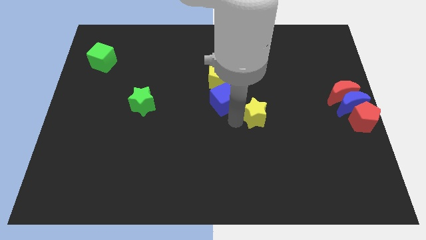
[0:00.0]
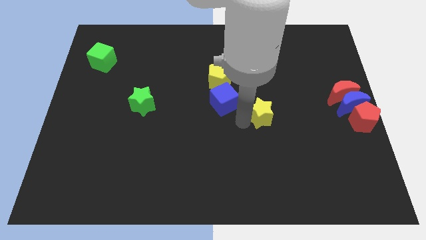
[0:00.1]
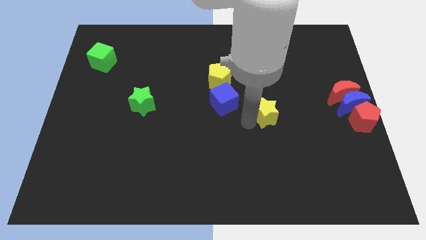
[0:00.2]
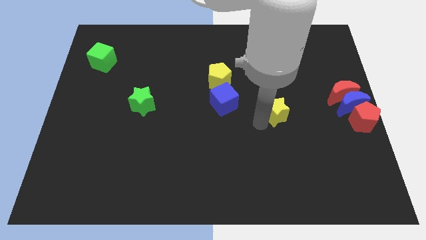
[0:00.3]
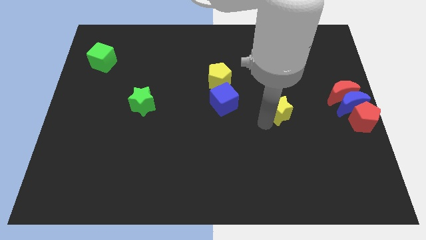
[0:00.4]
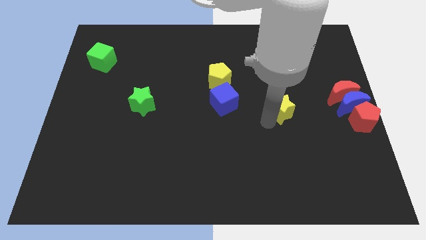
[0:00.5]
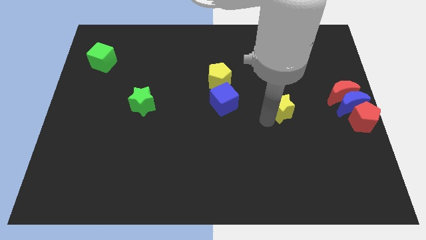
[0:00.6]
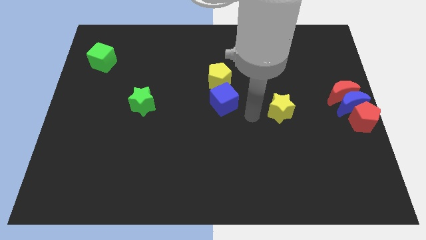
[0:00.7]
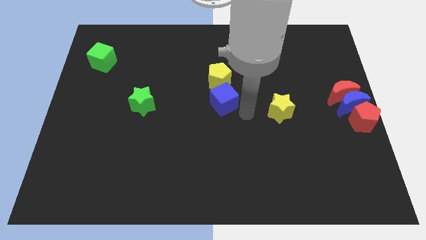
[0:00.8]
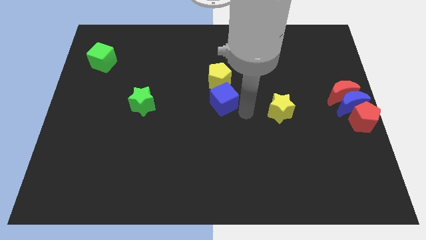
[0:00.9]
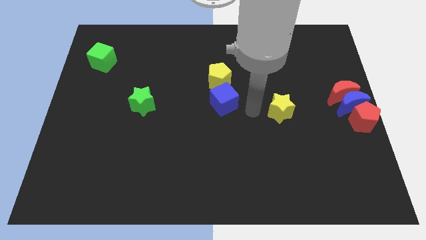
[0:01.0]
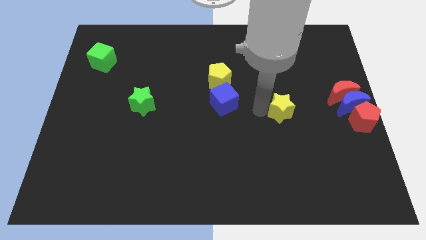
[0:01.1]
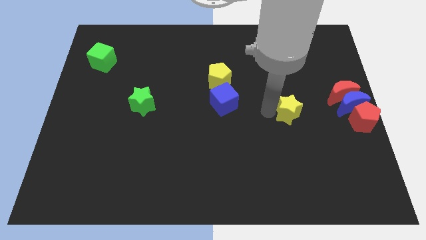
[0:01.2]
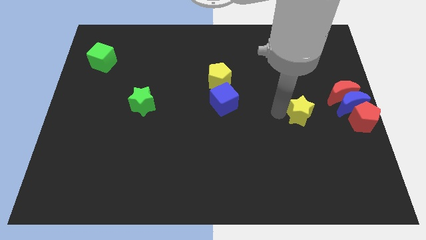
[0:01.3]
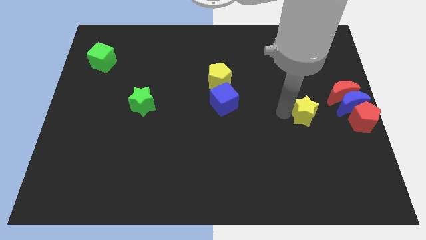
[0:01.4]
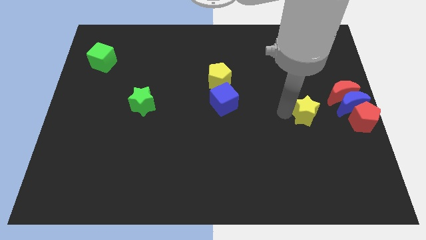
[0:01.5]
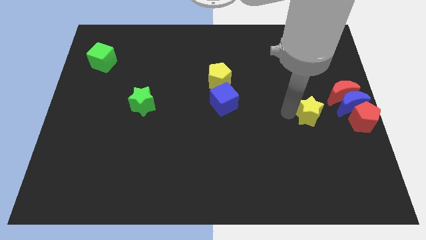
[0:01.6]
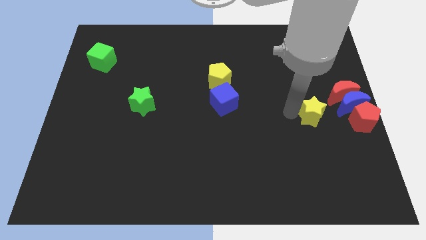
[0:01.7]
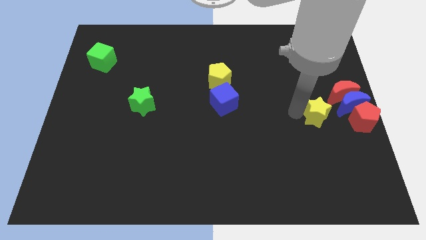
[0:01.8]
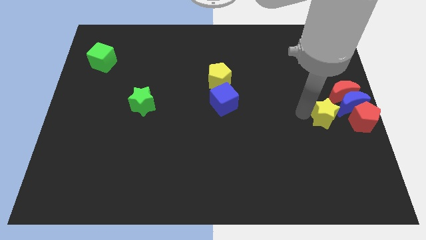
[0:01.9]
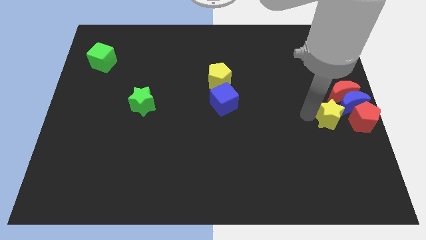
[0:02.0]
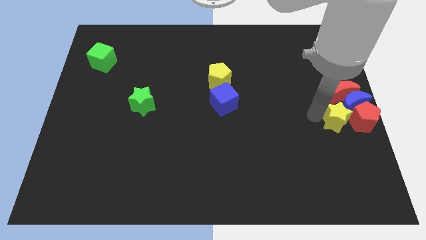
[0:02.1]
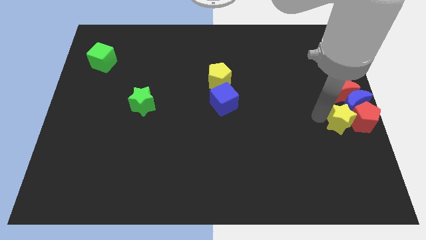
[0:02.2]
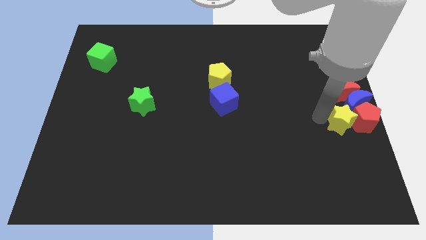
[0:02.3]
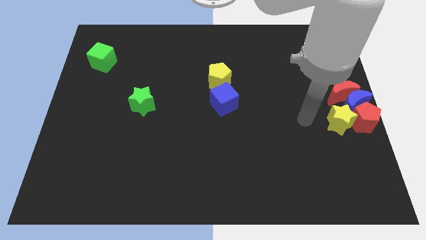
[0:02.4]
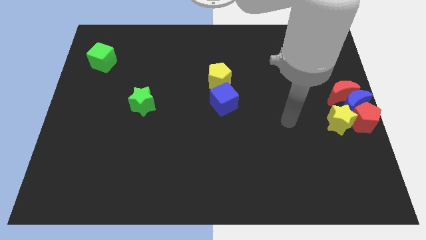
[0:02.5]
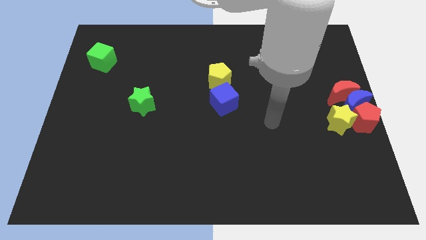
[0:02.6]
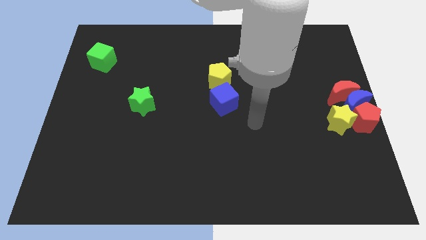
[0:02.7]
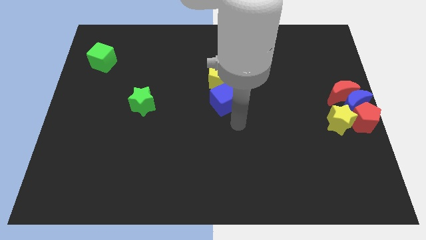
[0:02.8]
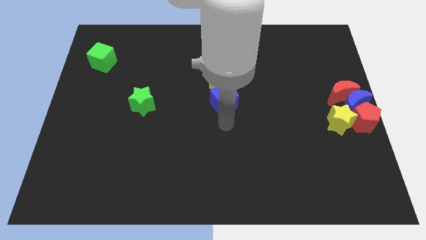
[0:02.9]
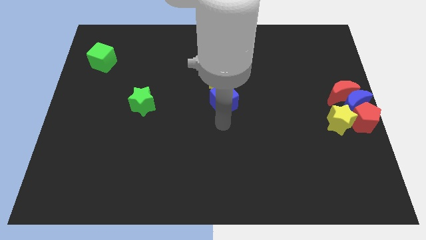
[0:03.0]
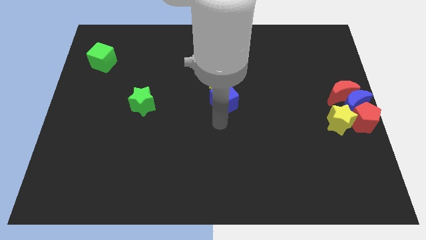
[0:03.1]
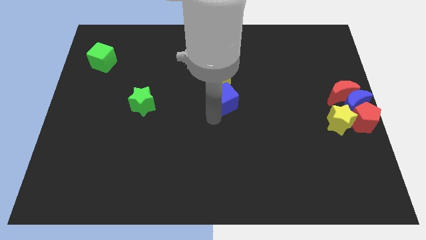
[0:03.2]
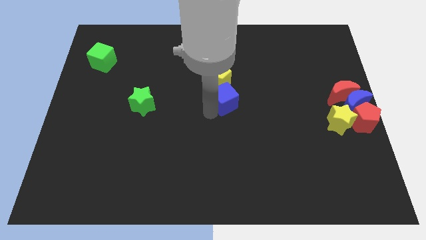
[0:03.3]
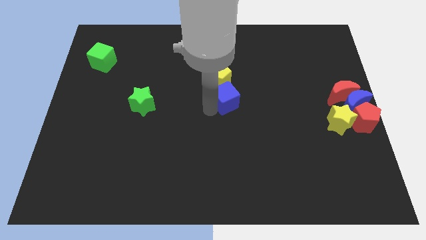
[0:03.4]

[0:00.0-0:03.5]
place the yellow star next to the red pentagon

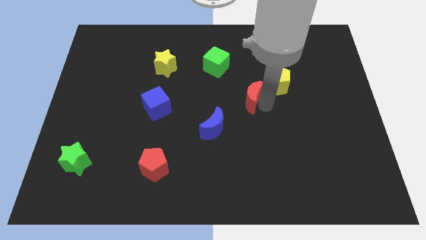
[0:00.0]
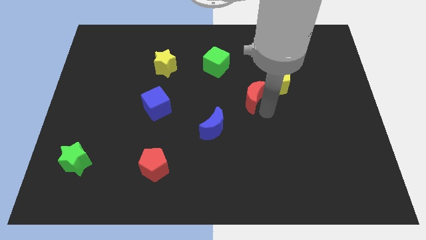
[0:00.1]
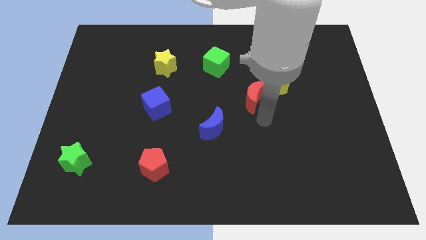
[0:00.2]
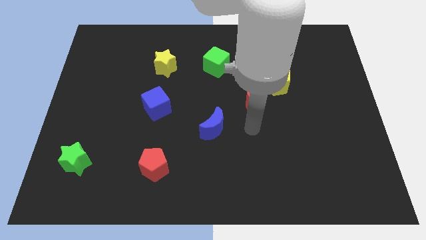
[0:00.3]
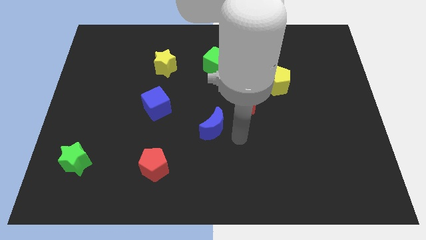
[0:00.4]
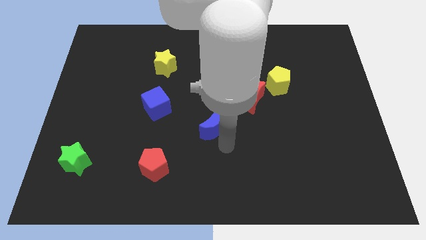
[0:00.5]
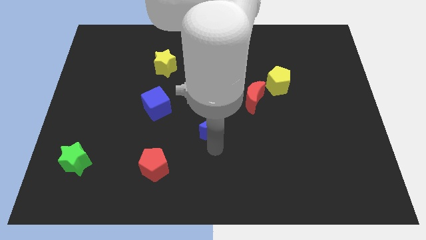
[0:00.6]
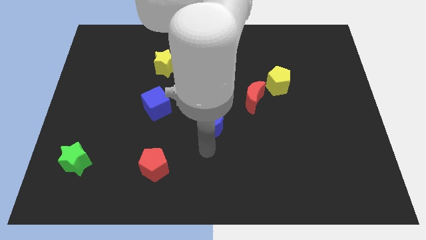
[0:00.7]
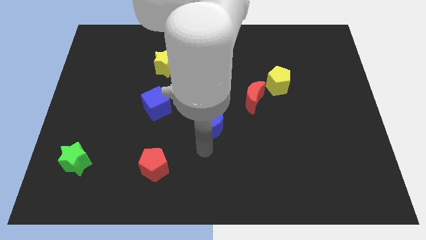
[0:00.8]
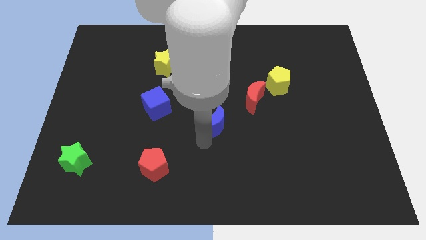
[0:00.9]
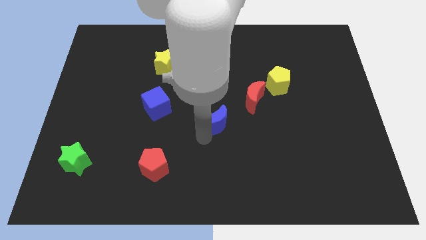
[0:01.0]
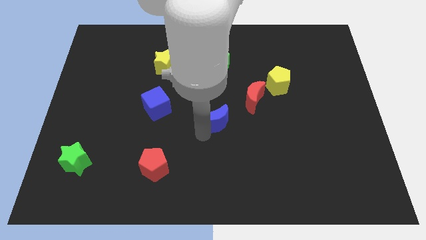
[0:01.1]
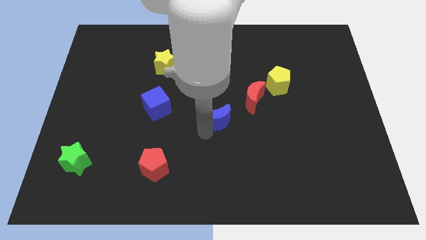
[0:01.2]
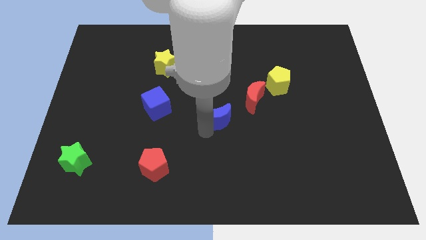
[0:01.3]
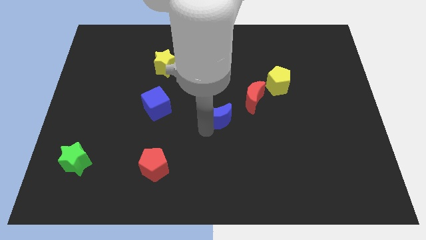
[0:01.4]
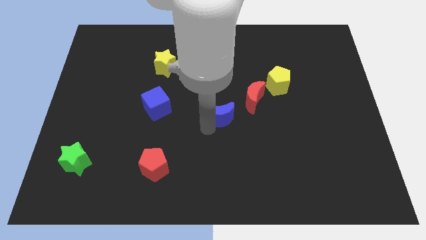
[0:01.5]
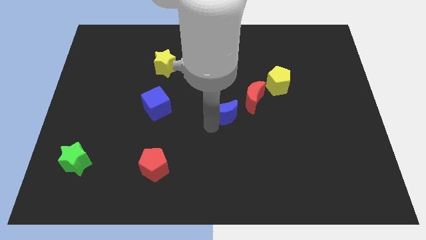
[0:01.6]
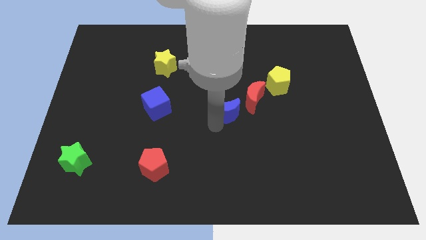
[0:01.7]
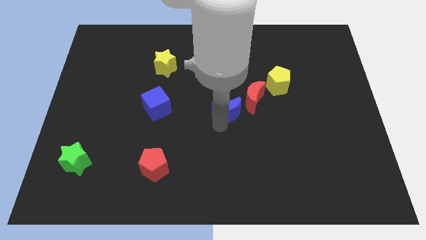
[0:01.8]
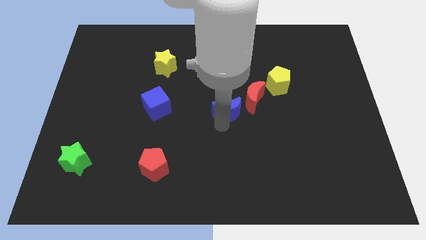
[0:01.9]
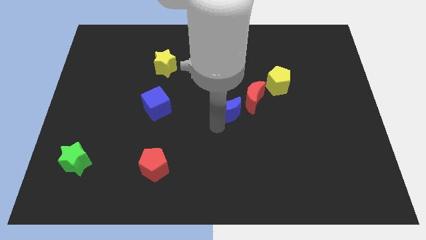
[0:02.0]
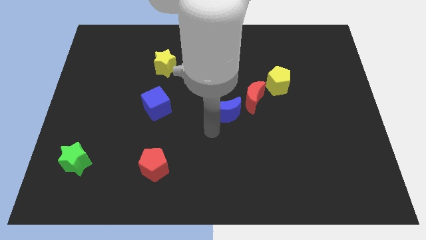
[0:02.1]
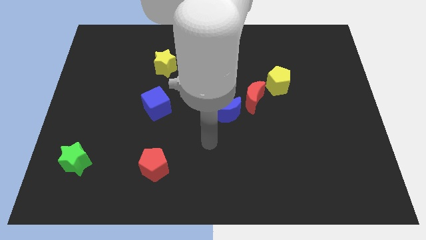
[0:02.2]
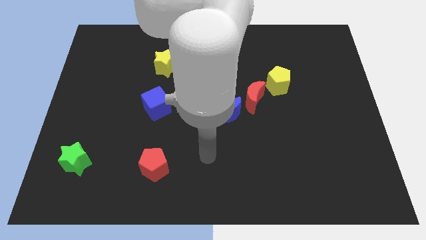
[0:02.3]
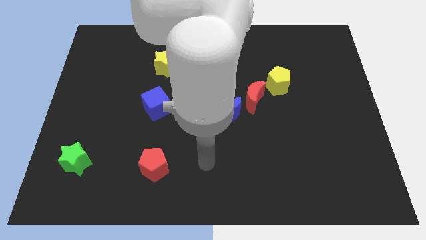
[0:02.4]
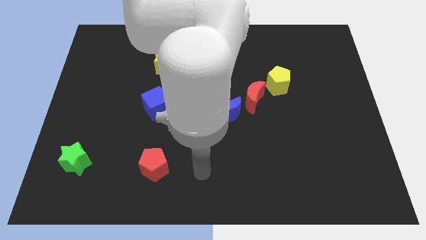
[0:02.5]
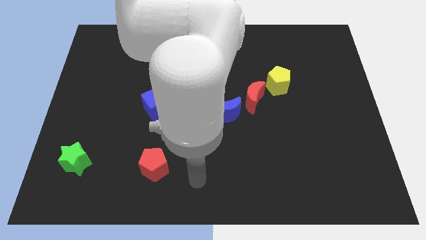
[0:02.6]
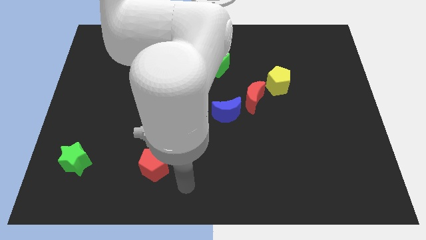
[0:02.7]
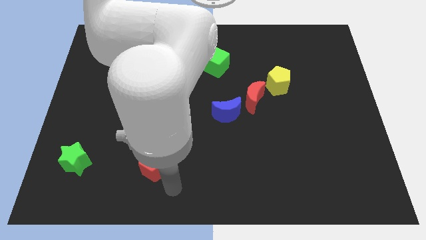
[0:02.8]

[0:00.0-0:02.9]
push the blue moon towards the top side of the board

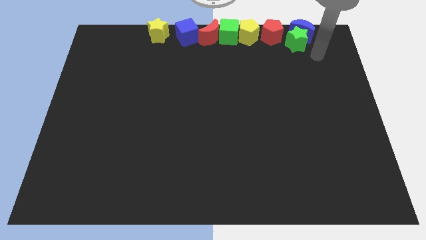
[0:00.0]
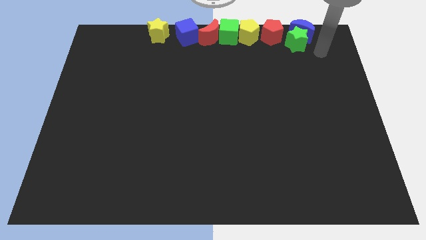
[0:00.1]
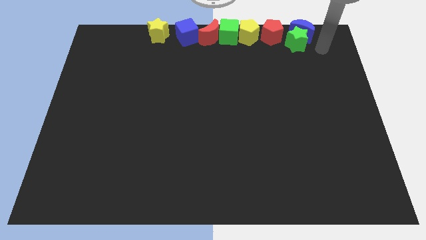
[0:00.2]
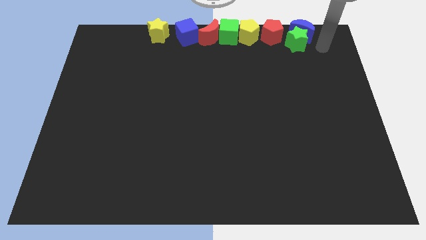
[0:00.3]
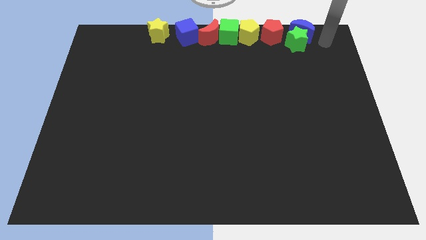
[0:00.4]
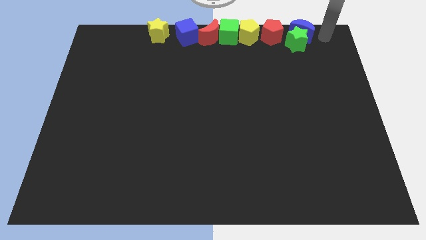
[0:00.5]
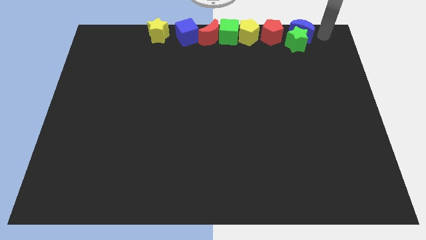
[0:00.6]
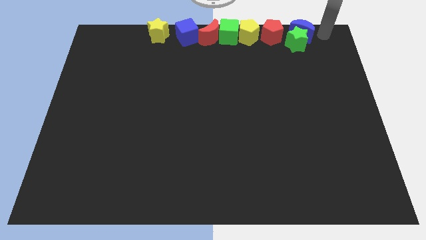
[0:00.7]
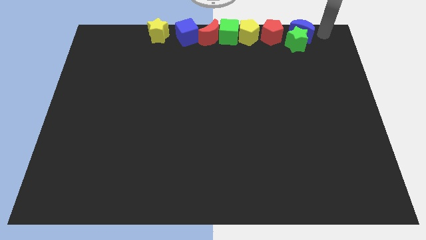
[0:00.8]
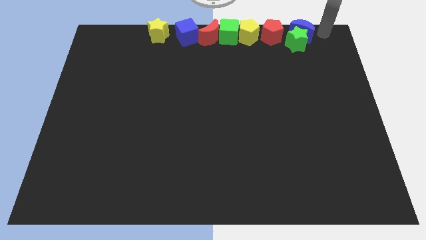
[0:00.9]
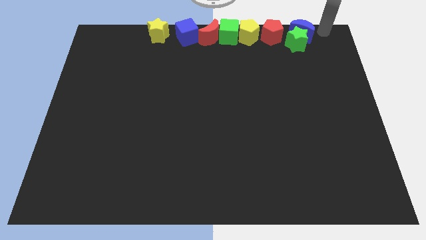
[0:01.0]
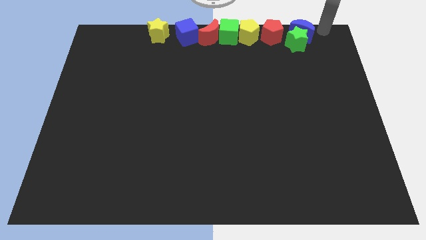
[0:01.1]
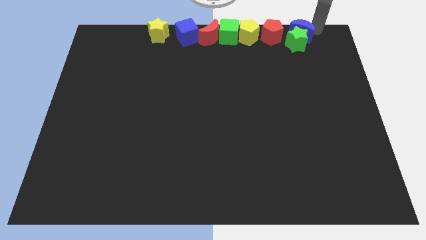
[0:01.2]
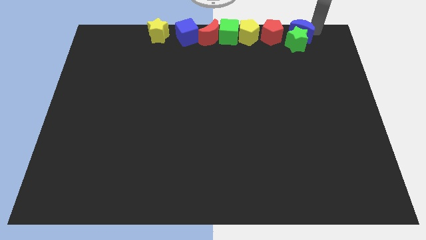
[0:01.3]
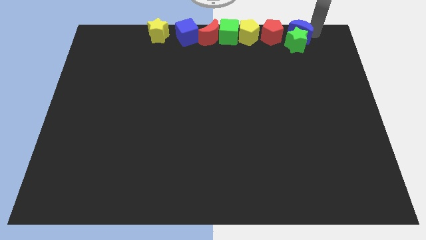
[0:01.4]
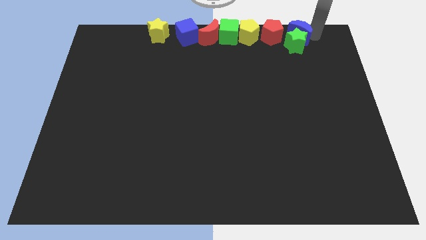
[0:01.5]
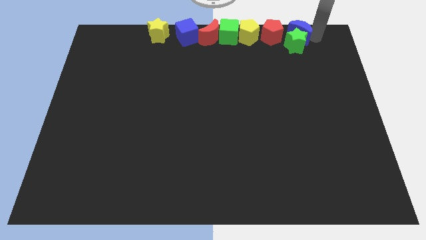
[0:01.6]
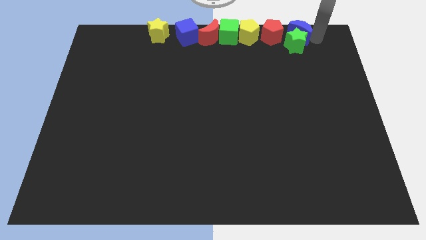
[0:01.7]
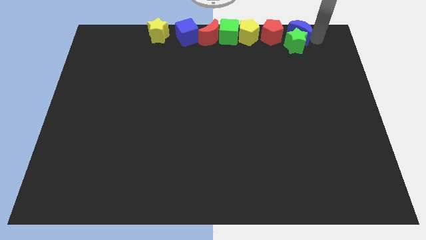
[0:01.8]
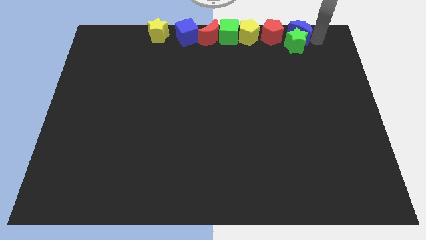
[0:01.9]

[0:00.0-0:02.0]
place the blue moon to the right beside the red pentagon

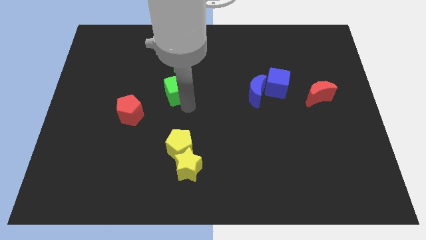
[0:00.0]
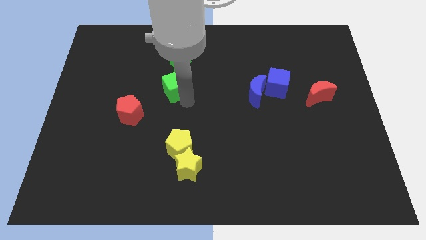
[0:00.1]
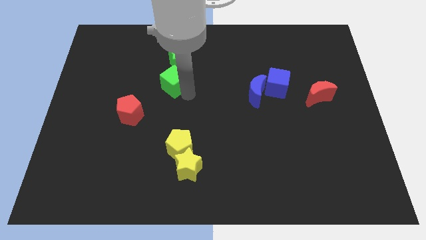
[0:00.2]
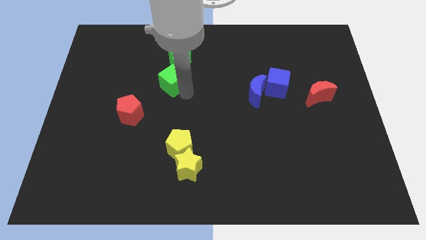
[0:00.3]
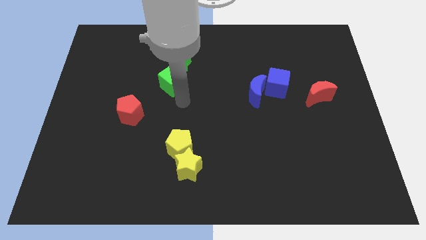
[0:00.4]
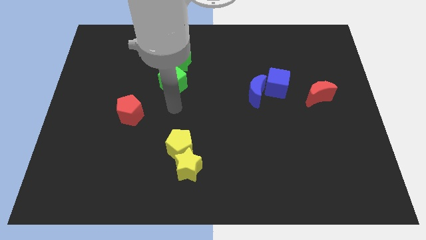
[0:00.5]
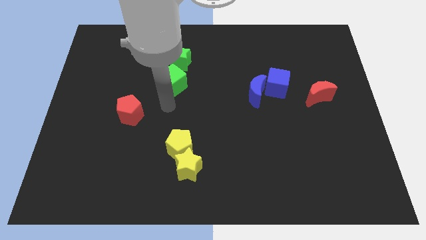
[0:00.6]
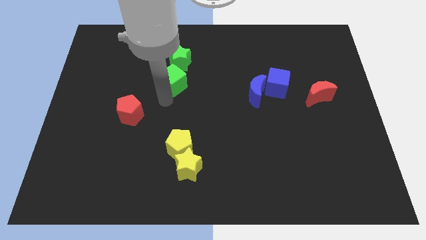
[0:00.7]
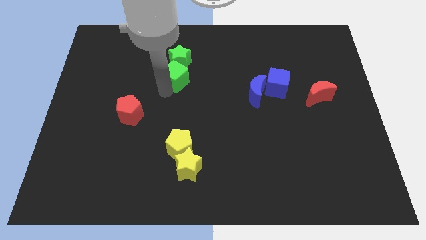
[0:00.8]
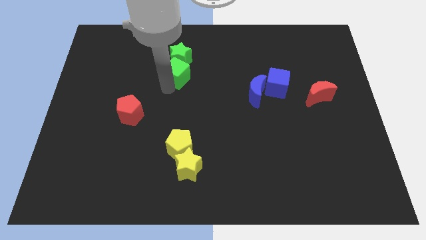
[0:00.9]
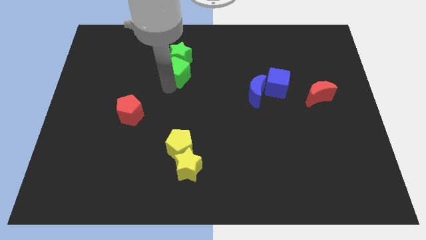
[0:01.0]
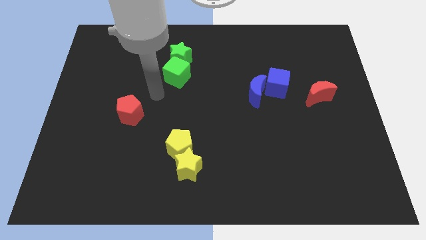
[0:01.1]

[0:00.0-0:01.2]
push green cube into the green star
